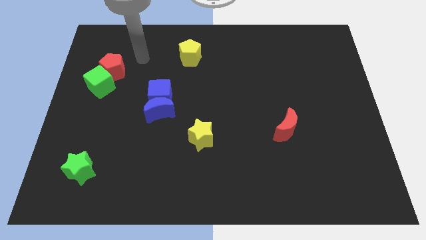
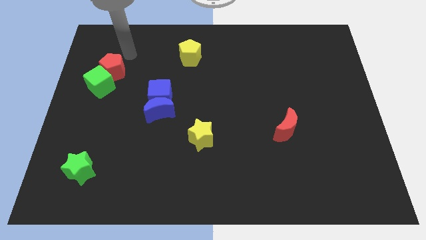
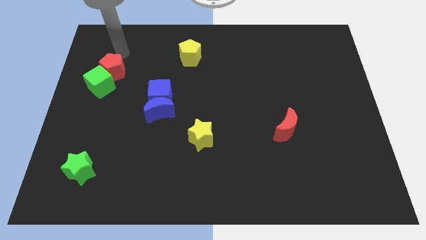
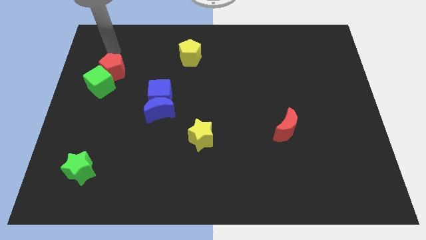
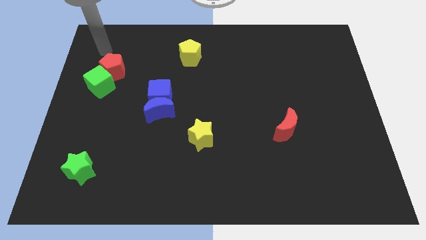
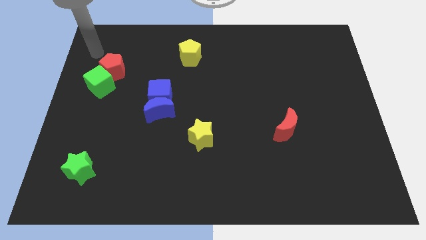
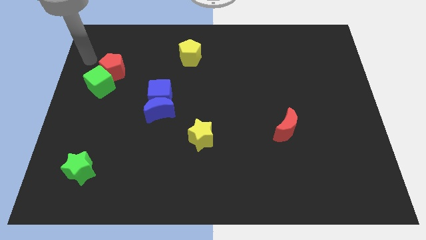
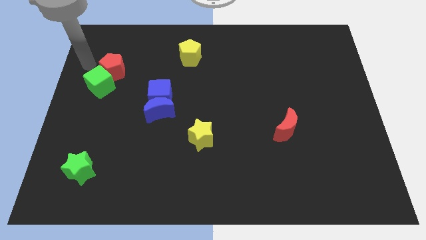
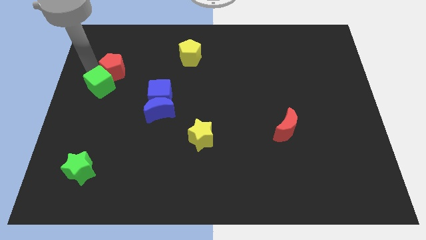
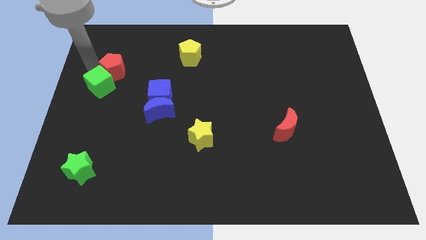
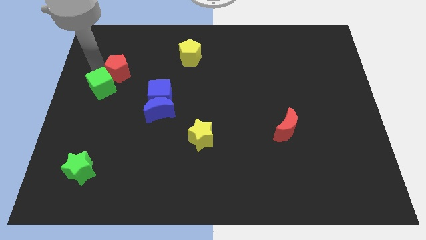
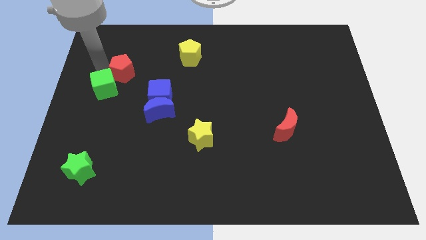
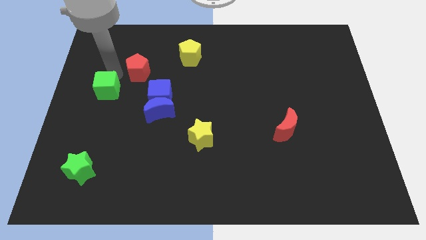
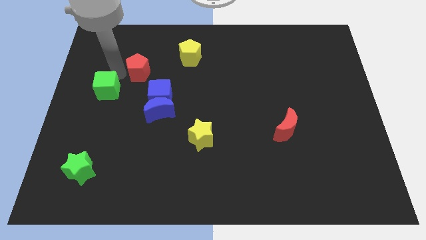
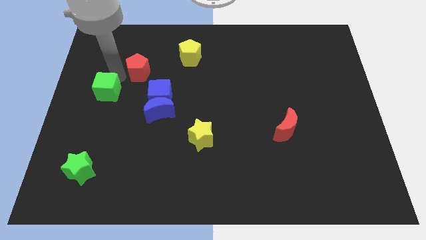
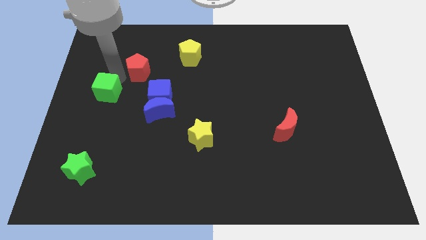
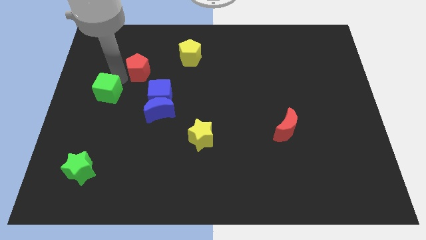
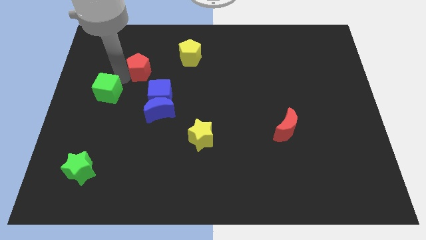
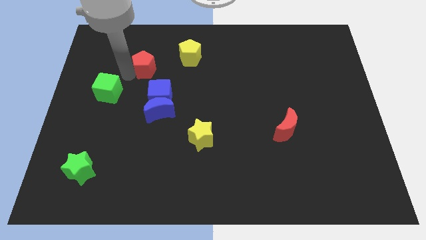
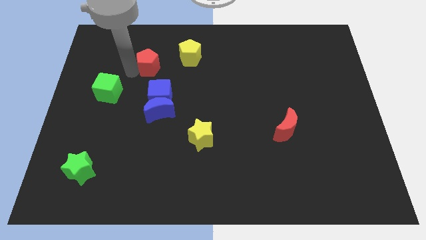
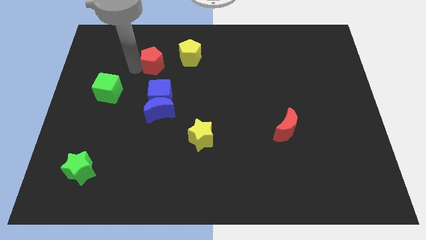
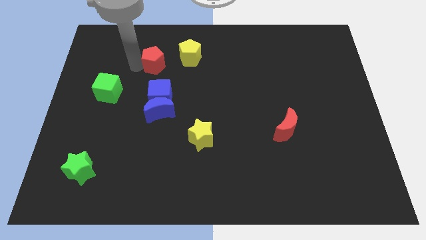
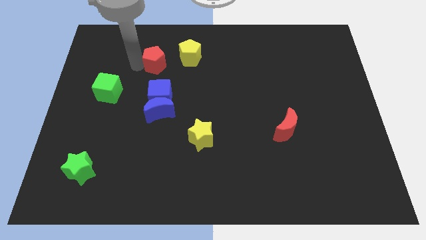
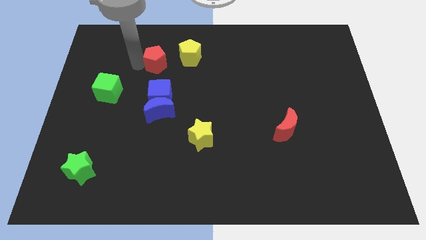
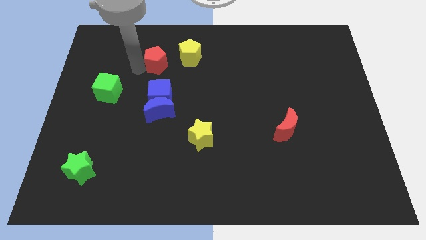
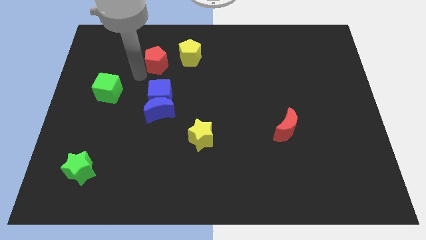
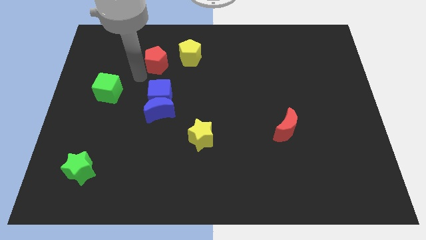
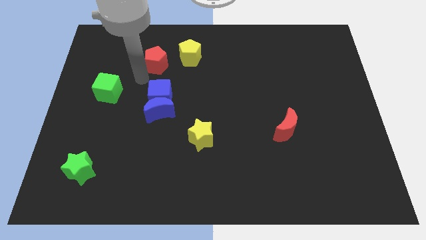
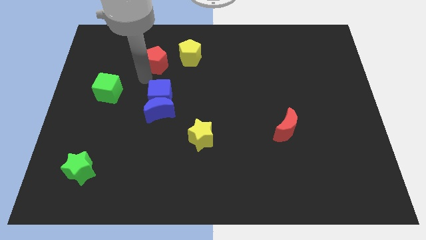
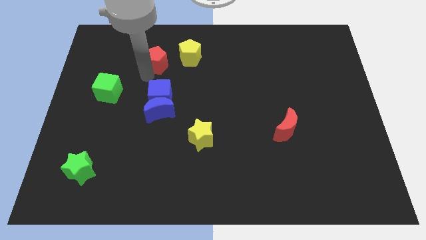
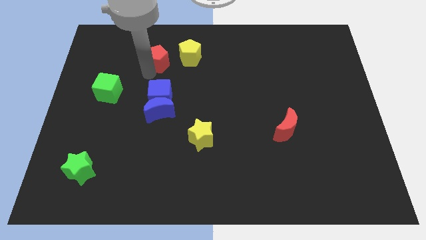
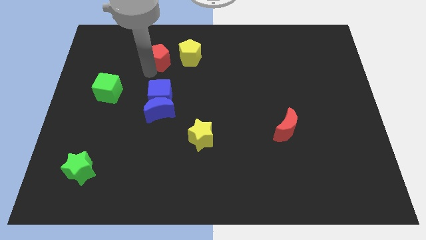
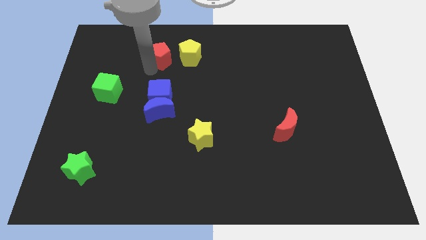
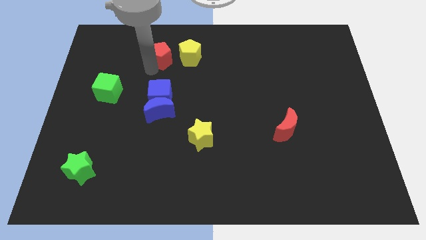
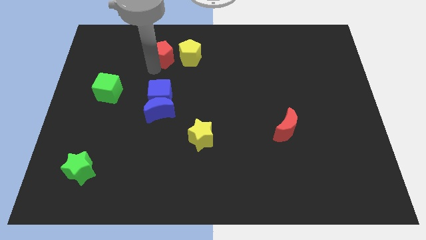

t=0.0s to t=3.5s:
place the red pentagon vertically above the blue cube

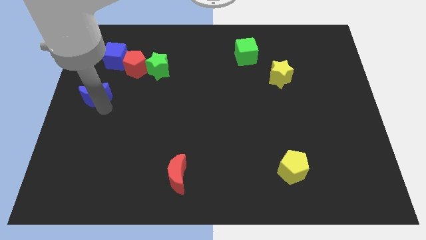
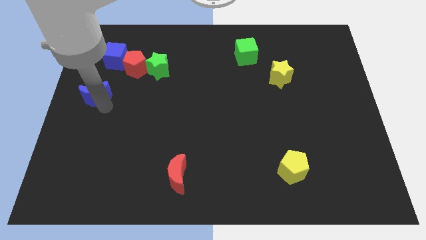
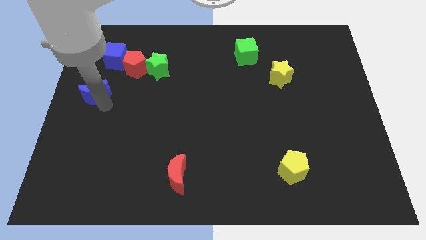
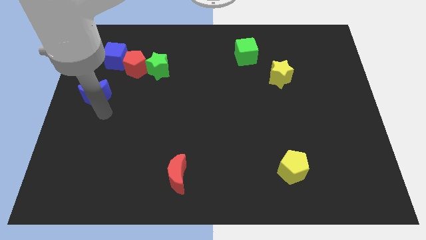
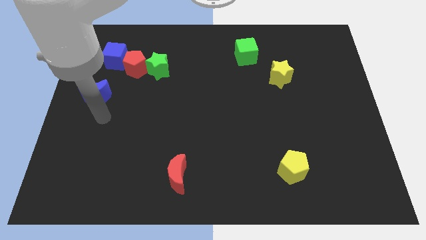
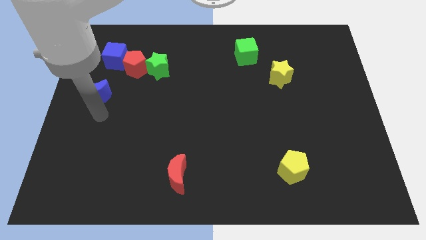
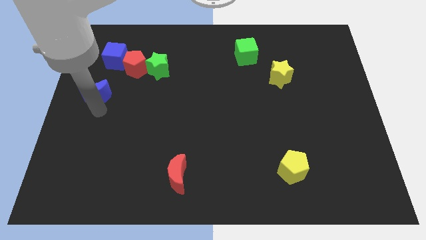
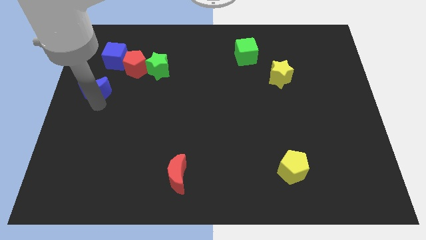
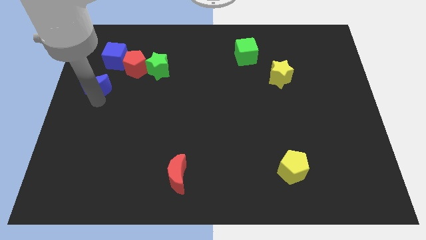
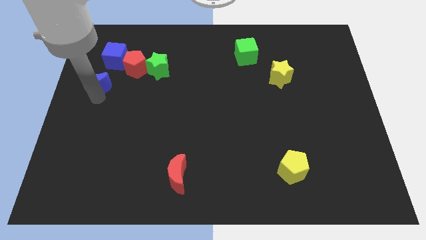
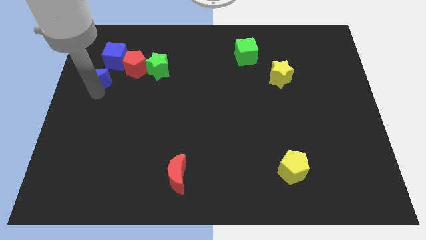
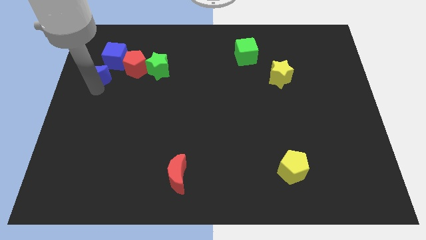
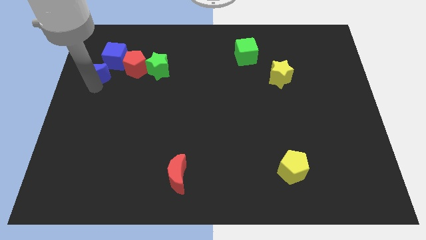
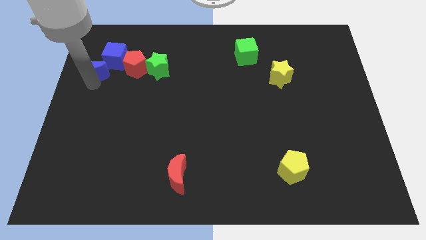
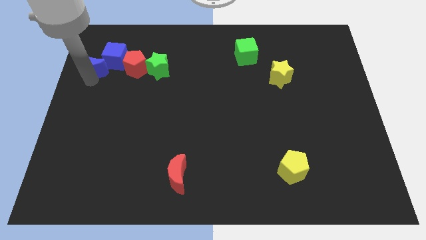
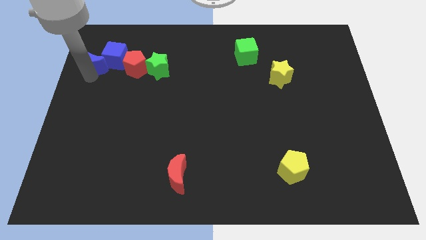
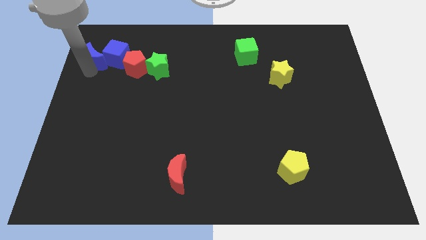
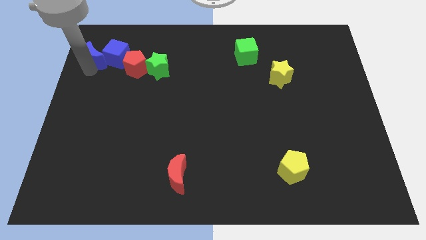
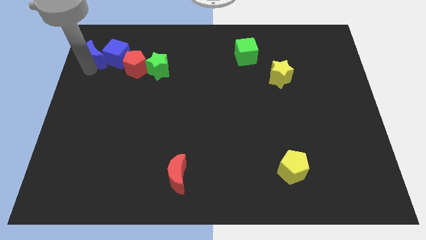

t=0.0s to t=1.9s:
push the blue moon into the blue cube

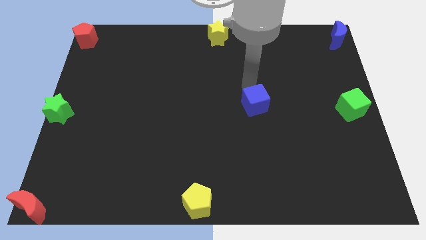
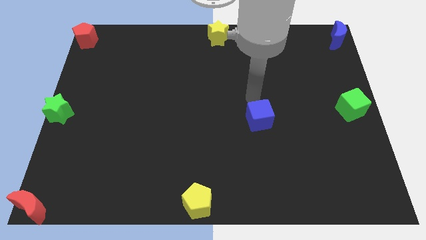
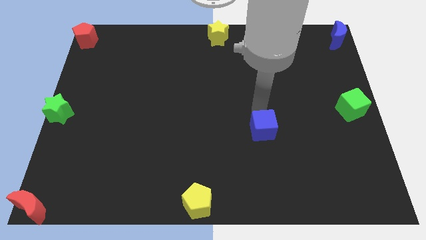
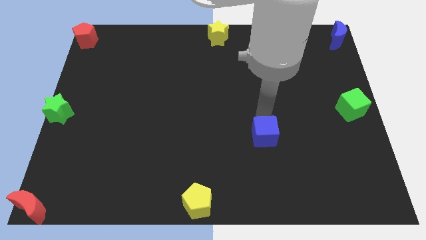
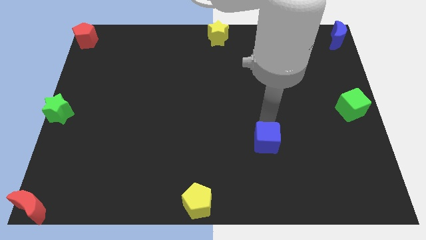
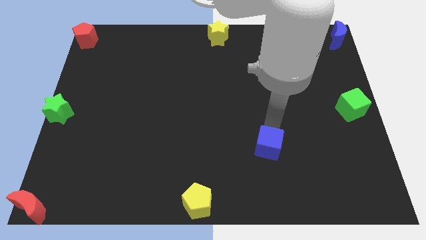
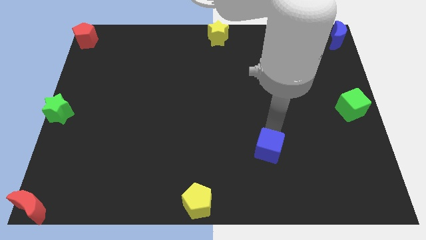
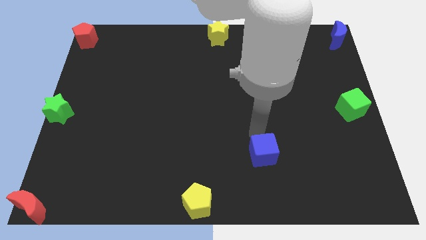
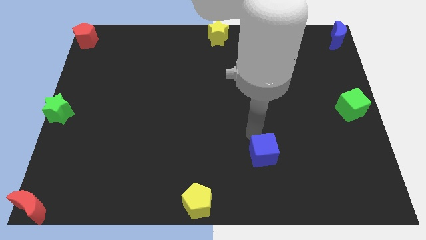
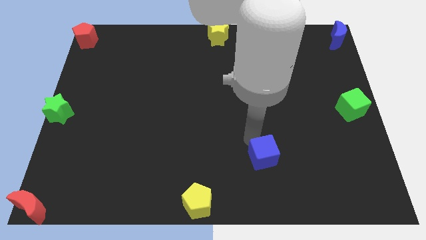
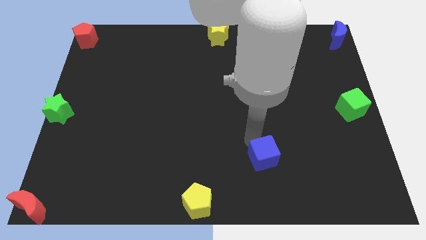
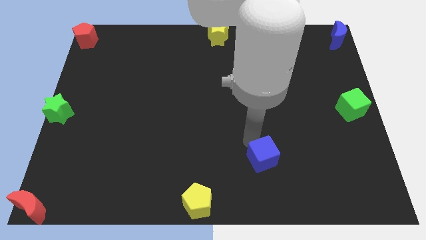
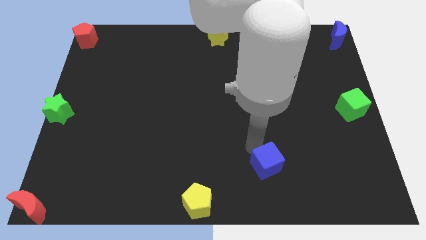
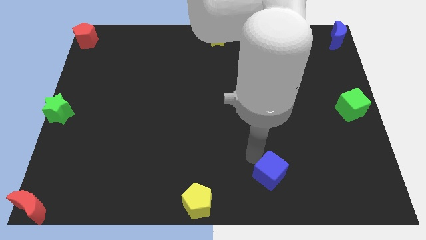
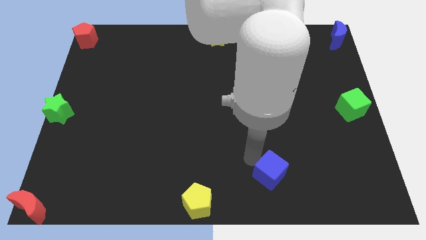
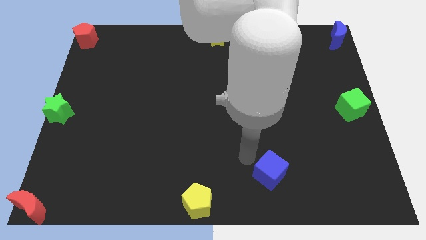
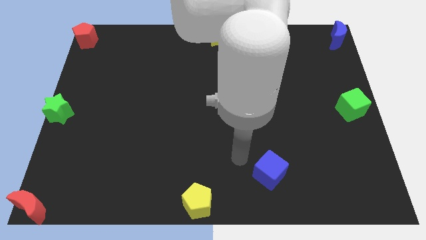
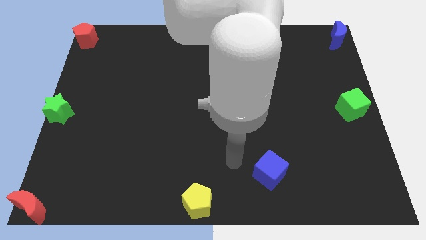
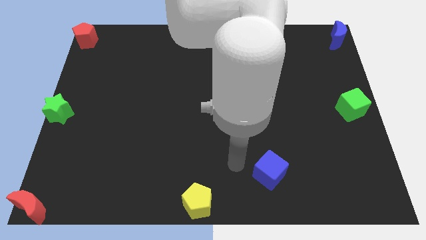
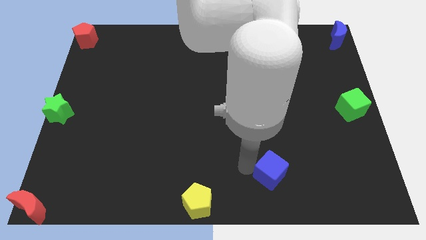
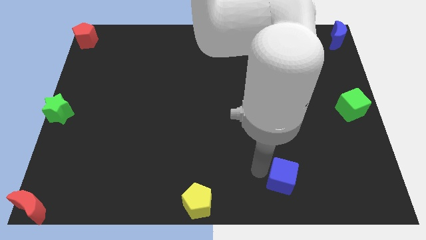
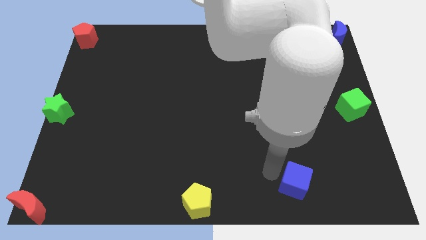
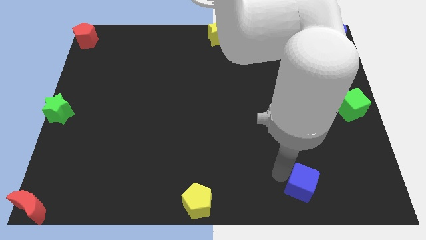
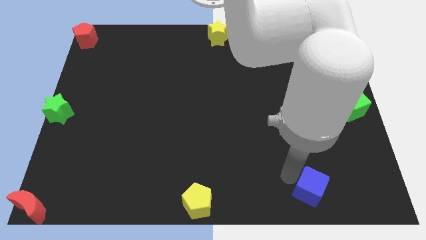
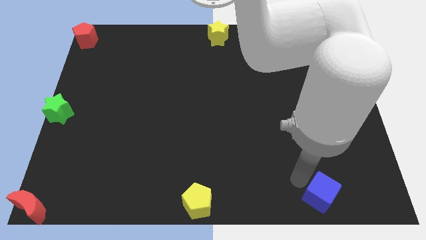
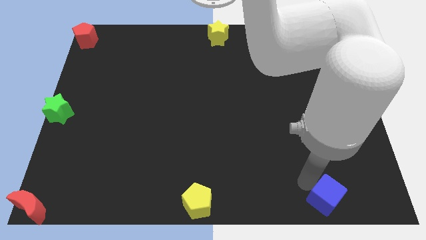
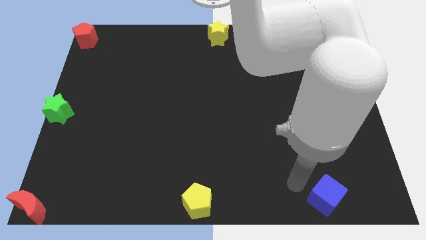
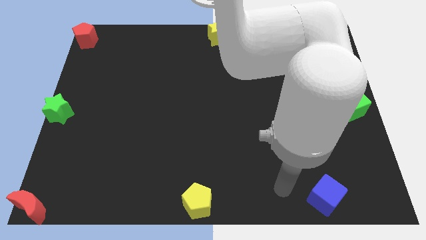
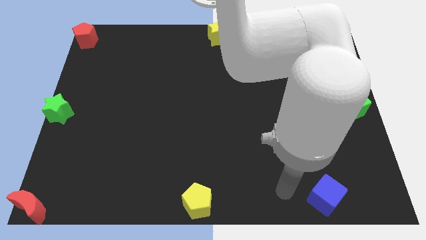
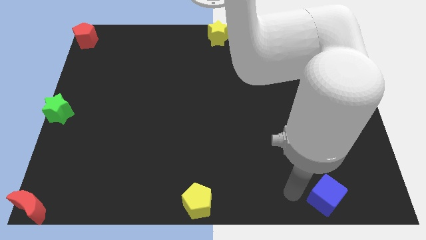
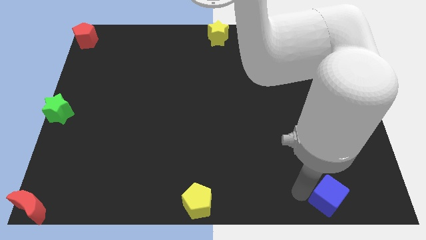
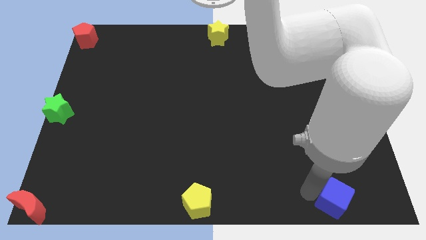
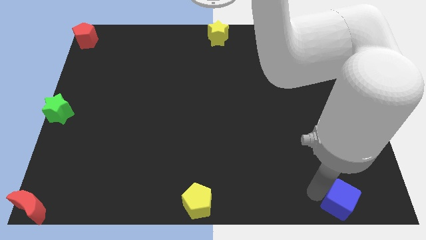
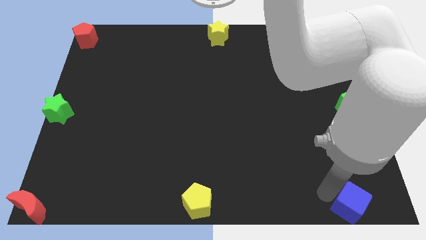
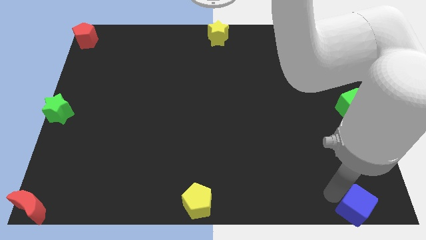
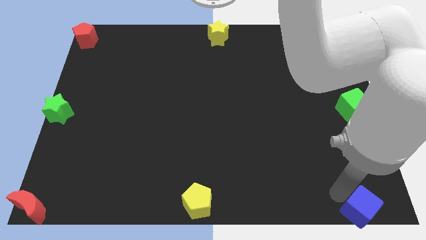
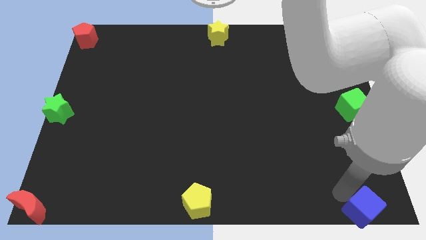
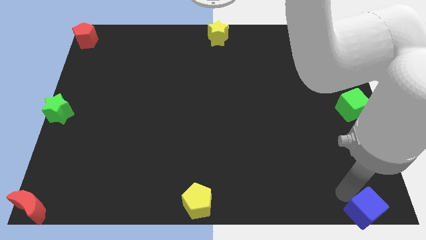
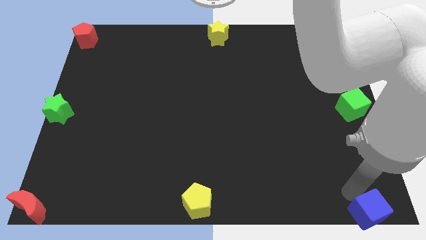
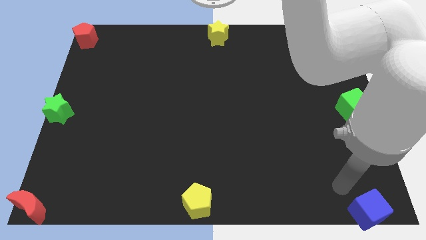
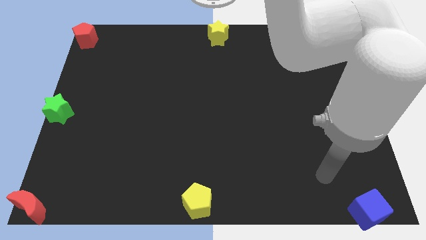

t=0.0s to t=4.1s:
move the blue cube to the bottom right corner of the board
